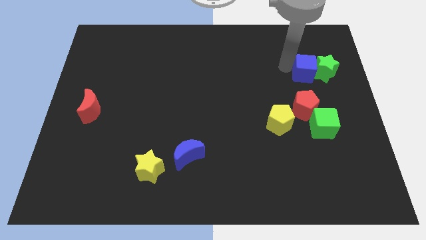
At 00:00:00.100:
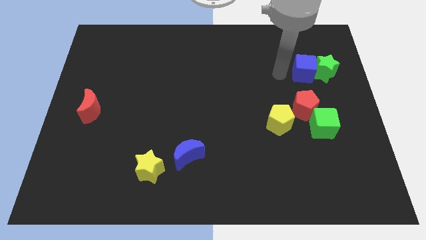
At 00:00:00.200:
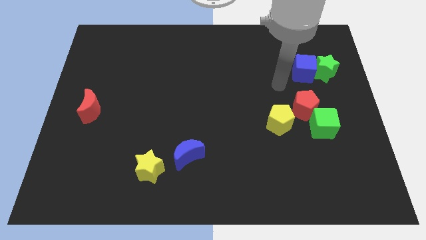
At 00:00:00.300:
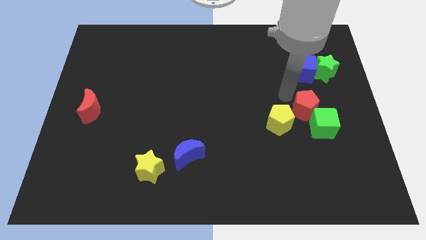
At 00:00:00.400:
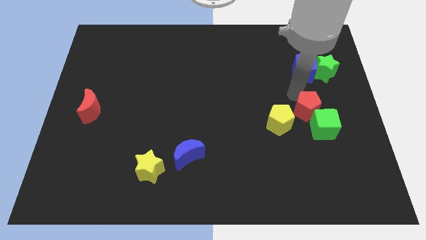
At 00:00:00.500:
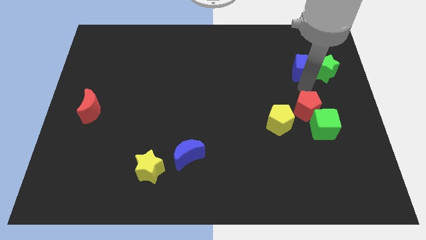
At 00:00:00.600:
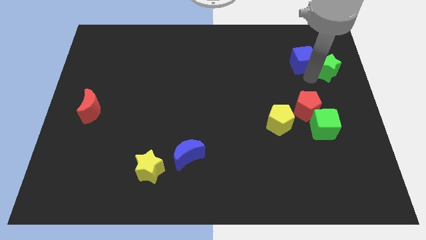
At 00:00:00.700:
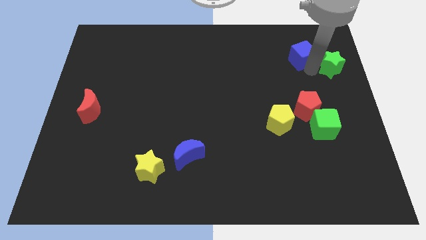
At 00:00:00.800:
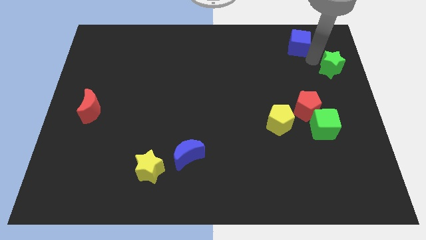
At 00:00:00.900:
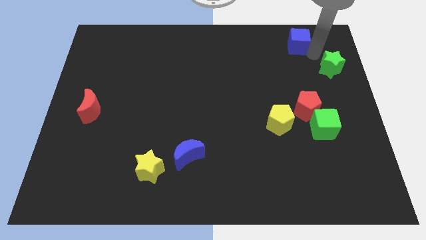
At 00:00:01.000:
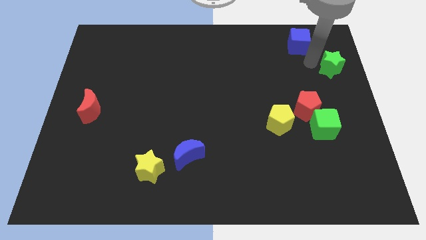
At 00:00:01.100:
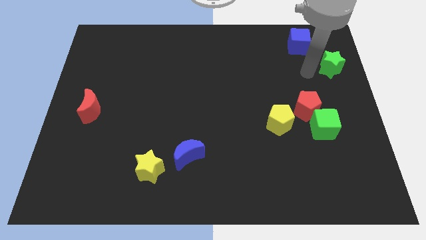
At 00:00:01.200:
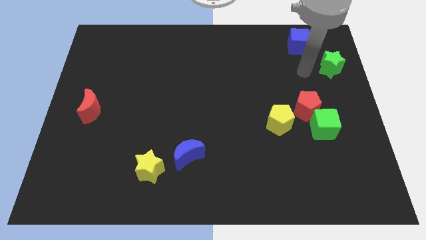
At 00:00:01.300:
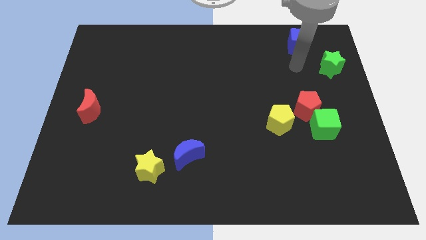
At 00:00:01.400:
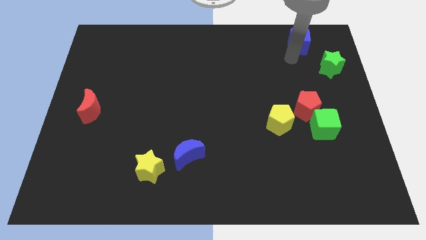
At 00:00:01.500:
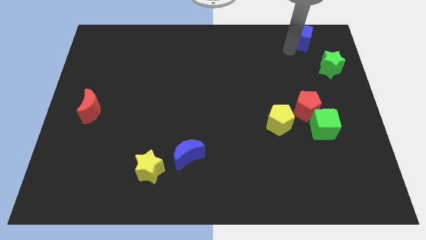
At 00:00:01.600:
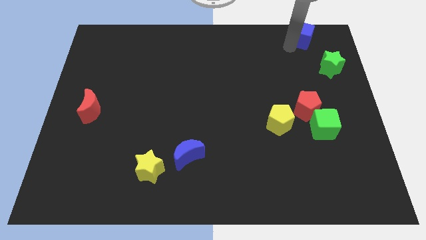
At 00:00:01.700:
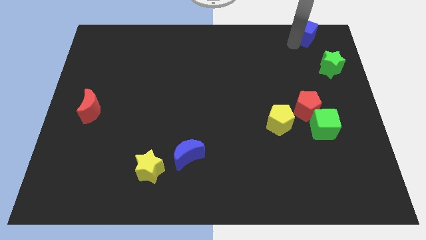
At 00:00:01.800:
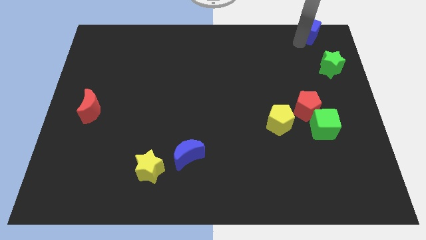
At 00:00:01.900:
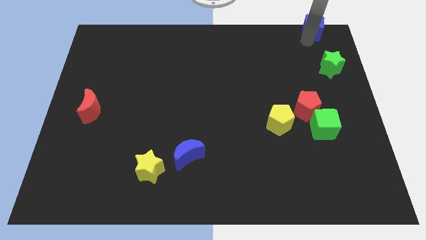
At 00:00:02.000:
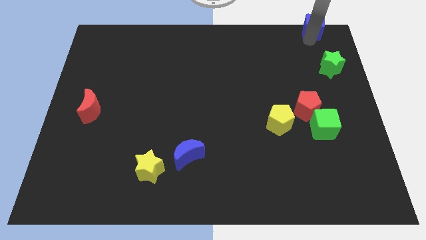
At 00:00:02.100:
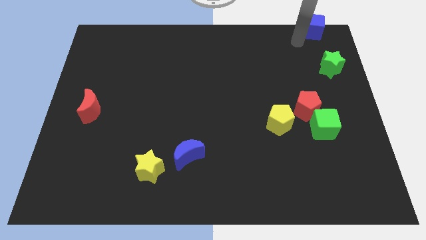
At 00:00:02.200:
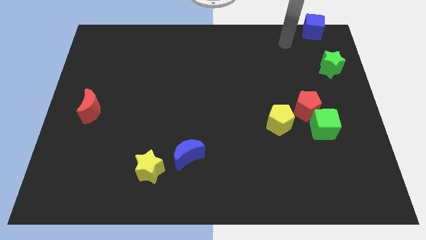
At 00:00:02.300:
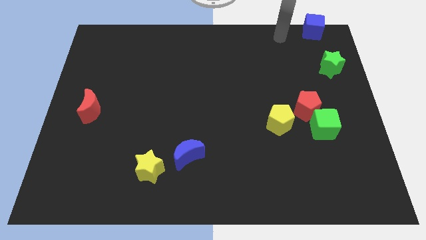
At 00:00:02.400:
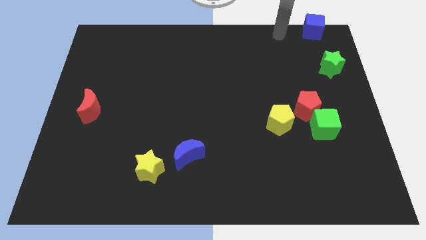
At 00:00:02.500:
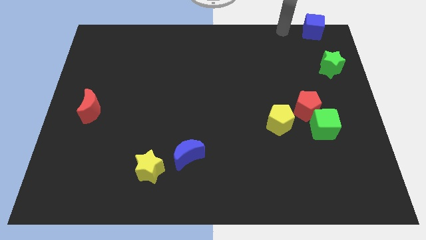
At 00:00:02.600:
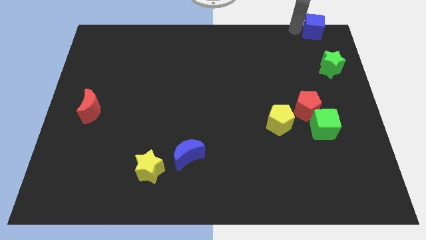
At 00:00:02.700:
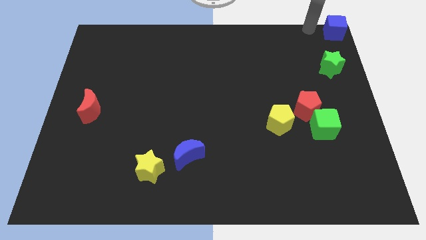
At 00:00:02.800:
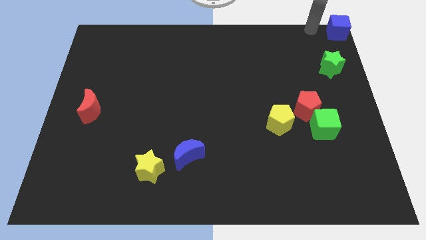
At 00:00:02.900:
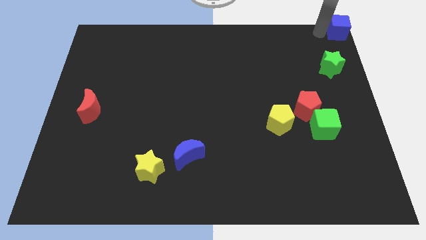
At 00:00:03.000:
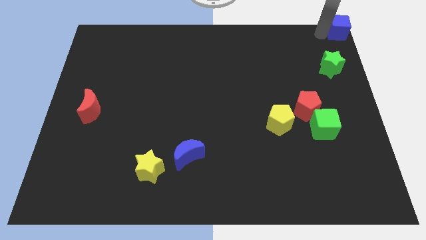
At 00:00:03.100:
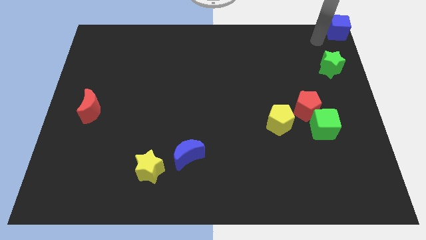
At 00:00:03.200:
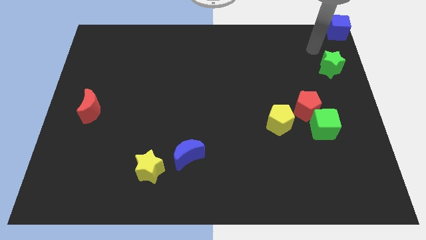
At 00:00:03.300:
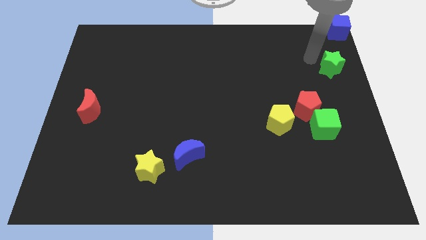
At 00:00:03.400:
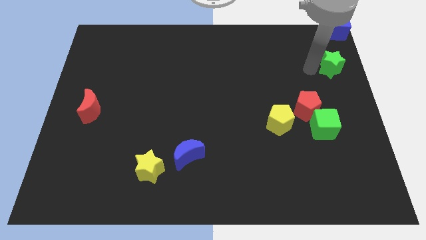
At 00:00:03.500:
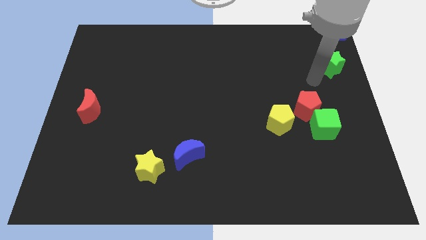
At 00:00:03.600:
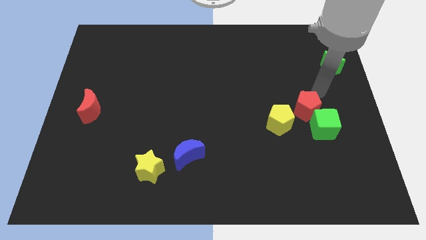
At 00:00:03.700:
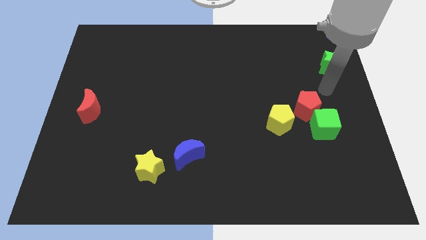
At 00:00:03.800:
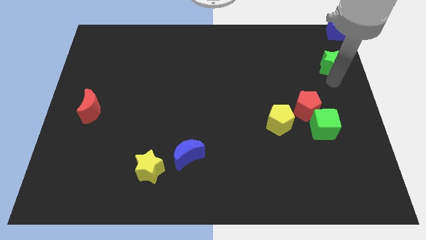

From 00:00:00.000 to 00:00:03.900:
separate the blue cube from the green star

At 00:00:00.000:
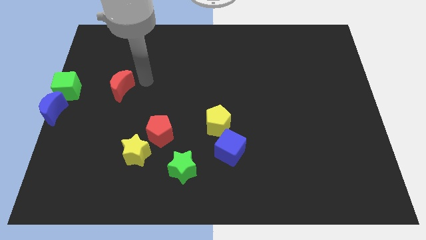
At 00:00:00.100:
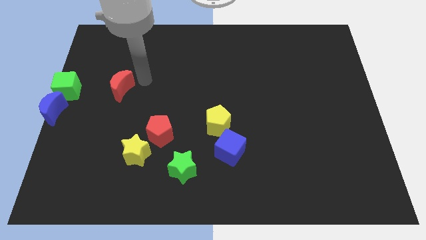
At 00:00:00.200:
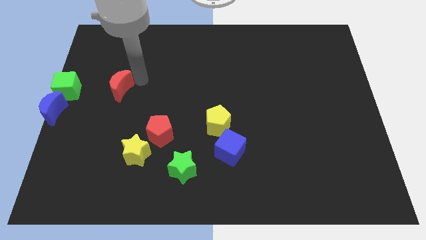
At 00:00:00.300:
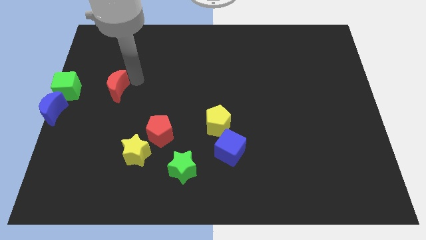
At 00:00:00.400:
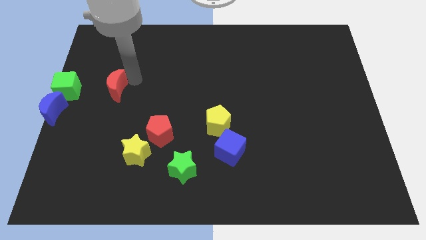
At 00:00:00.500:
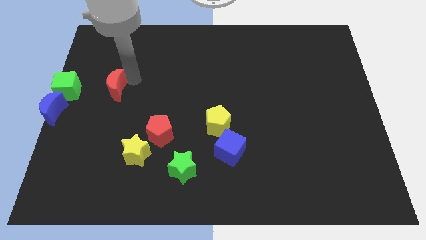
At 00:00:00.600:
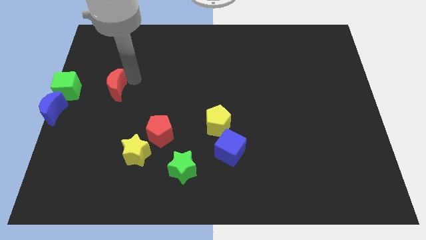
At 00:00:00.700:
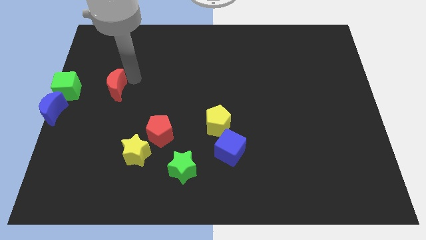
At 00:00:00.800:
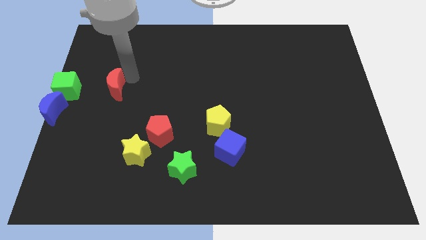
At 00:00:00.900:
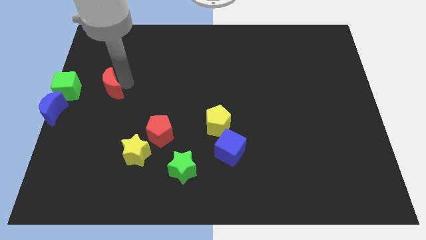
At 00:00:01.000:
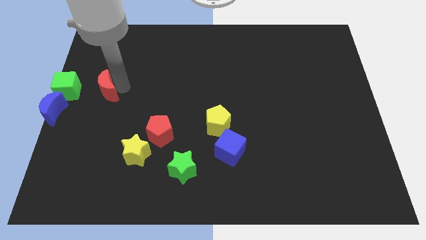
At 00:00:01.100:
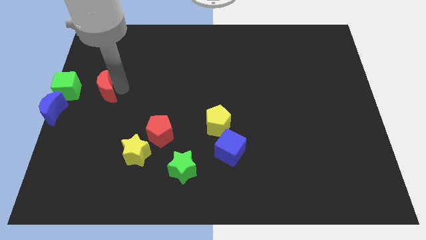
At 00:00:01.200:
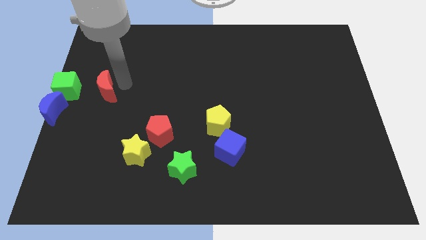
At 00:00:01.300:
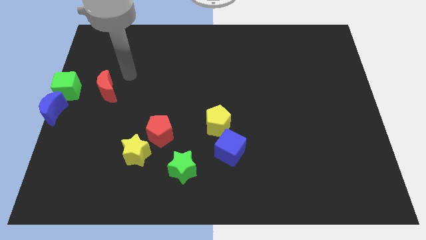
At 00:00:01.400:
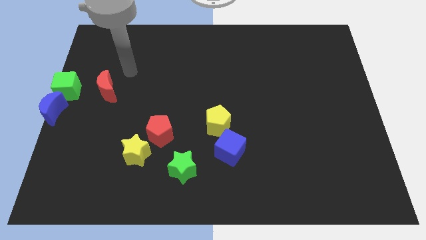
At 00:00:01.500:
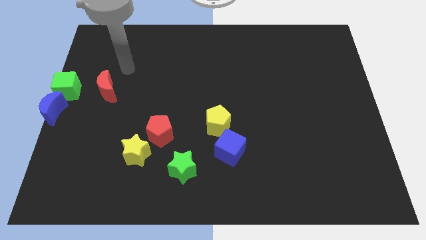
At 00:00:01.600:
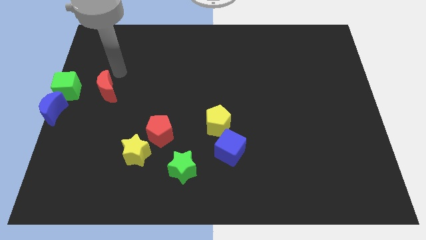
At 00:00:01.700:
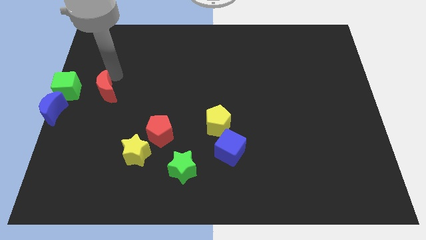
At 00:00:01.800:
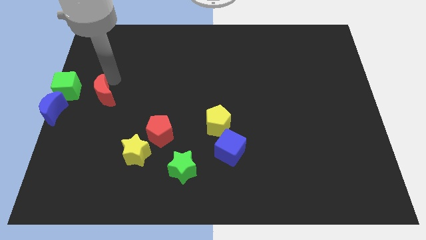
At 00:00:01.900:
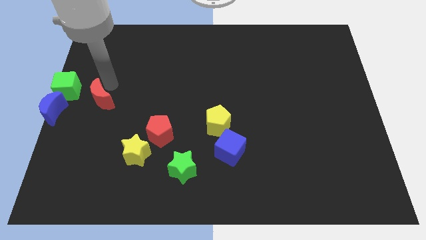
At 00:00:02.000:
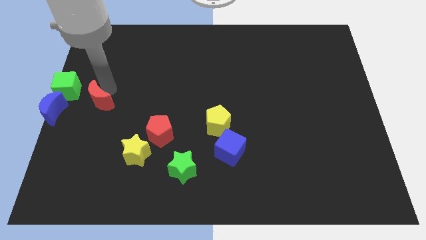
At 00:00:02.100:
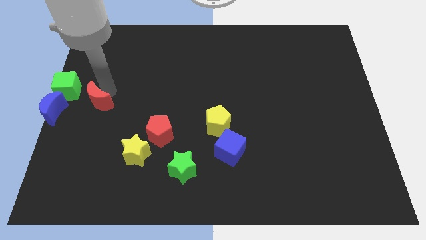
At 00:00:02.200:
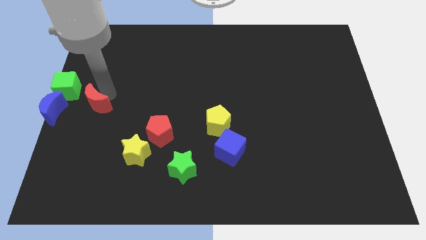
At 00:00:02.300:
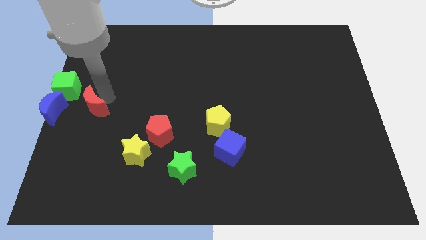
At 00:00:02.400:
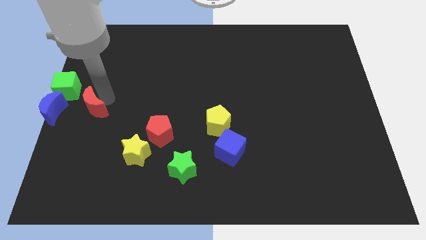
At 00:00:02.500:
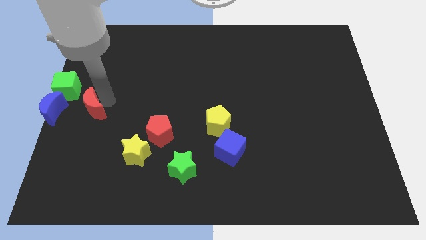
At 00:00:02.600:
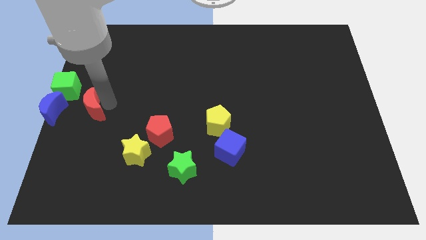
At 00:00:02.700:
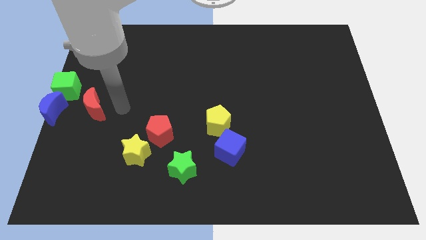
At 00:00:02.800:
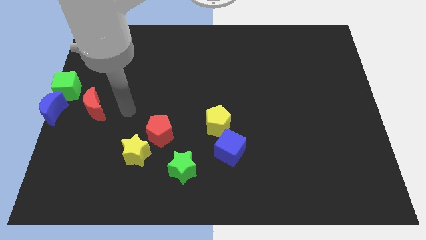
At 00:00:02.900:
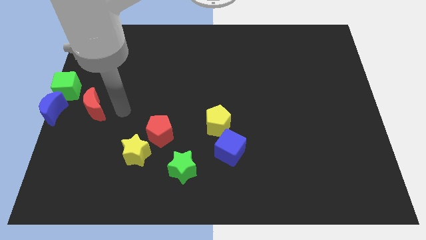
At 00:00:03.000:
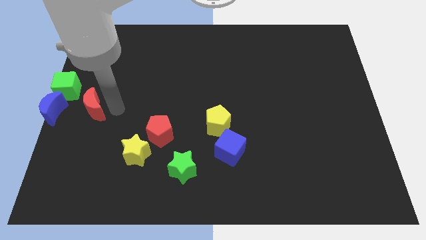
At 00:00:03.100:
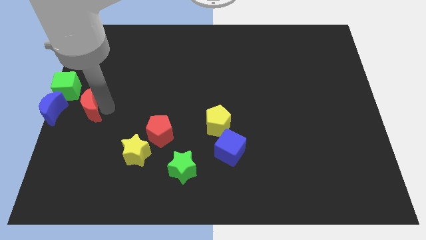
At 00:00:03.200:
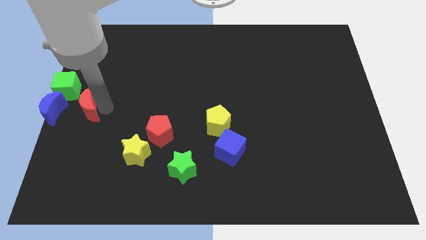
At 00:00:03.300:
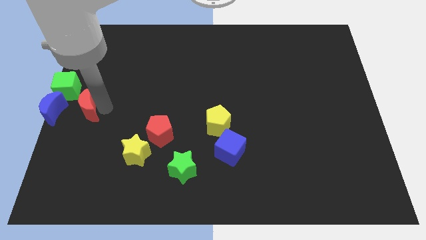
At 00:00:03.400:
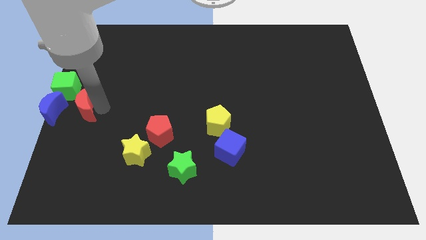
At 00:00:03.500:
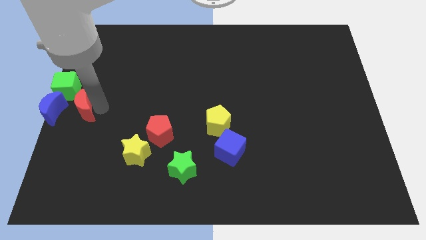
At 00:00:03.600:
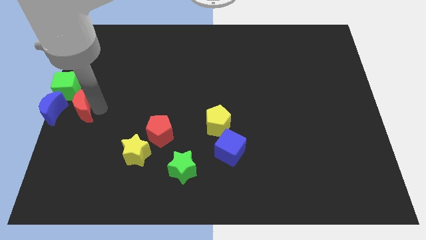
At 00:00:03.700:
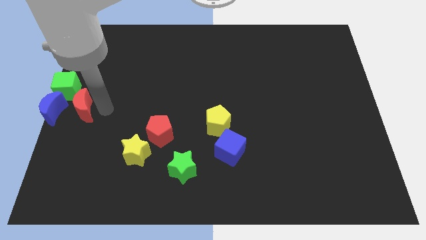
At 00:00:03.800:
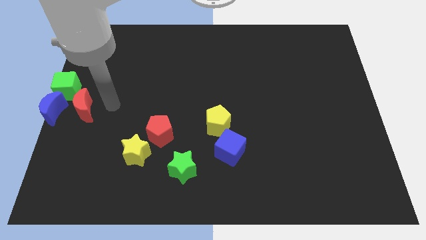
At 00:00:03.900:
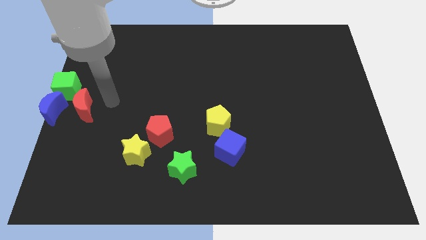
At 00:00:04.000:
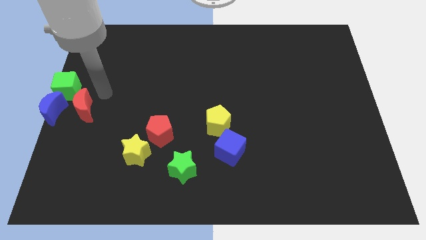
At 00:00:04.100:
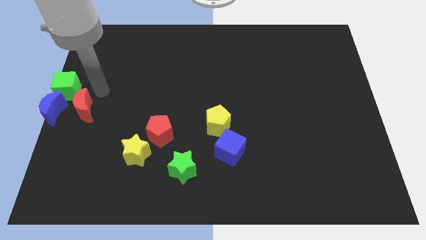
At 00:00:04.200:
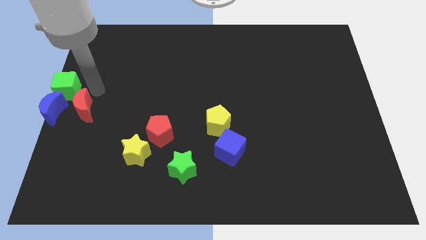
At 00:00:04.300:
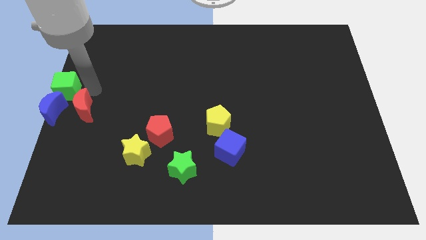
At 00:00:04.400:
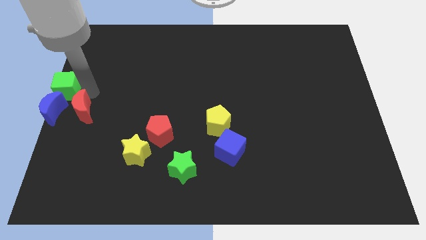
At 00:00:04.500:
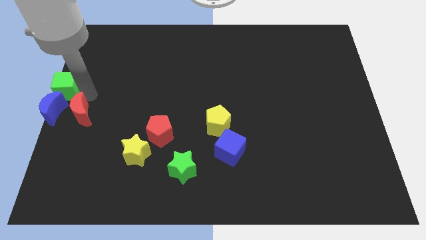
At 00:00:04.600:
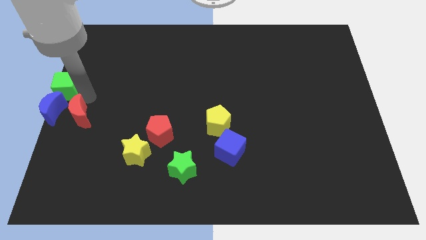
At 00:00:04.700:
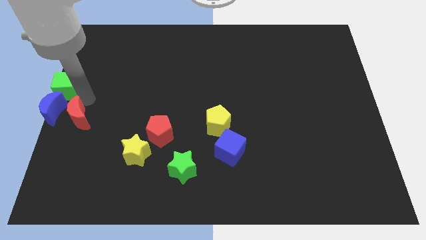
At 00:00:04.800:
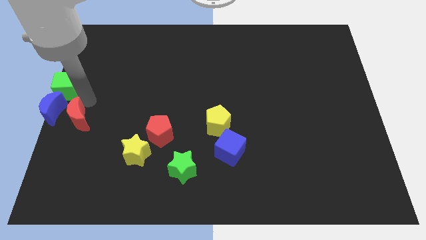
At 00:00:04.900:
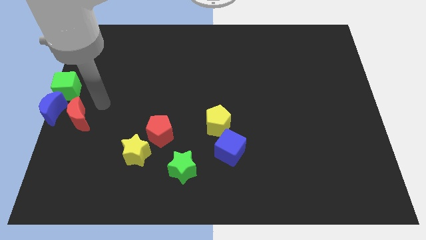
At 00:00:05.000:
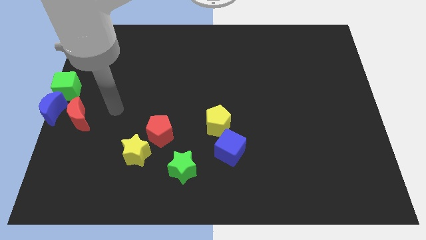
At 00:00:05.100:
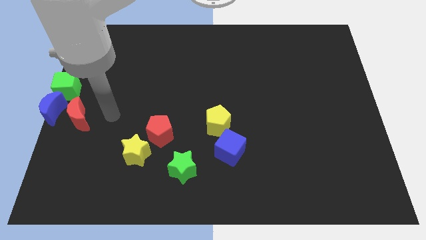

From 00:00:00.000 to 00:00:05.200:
place the red crescent to the right of the blue crescent
